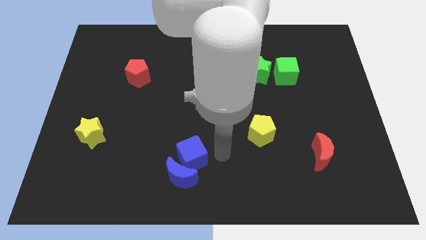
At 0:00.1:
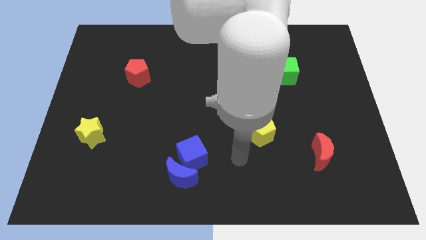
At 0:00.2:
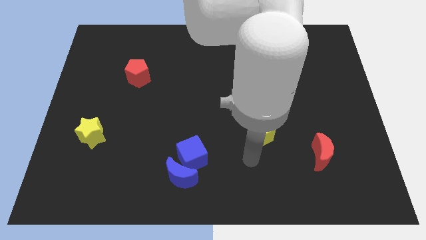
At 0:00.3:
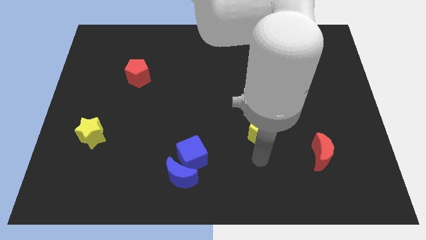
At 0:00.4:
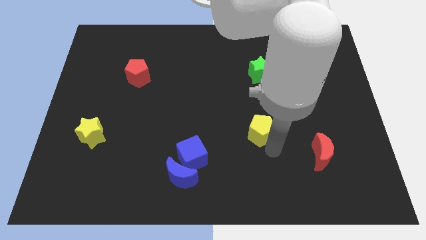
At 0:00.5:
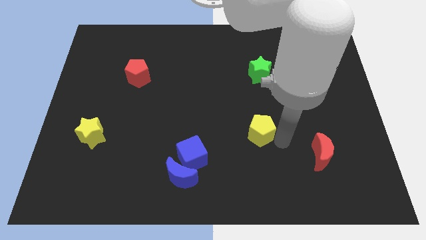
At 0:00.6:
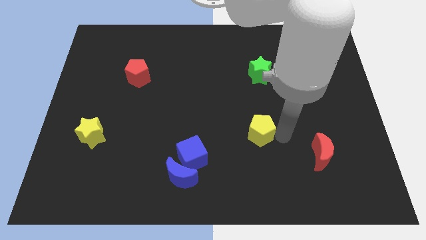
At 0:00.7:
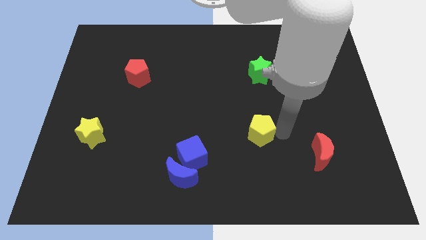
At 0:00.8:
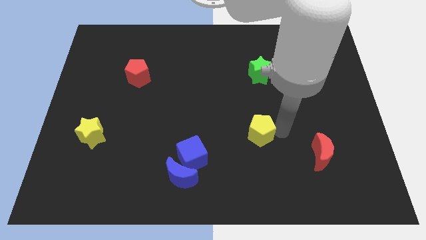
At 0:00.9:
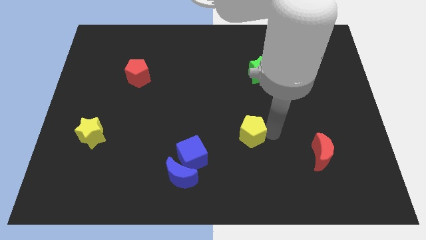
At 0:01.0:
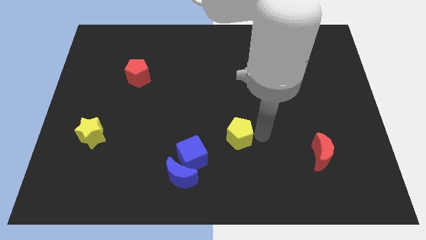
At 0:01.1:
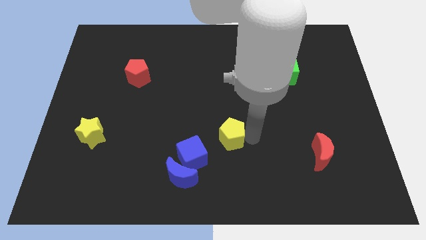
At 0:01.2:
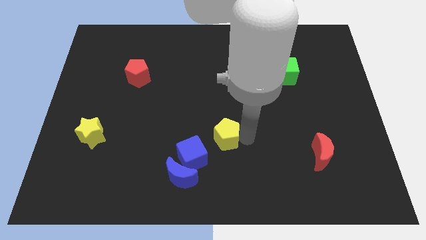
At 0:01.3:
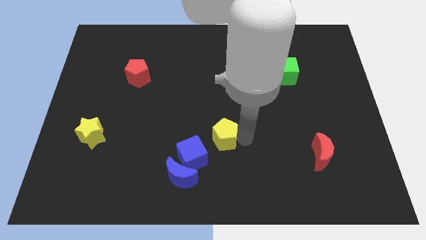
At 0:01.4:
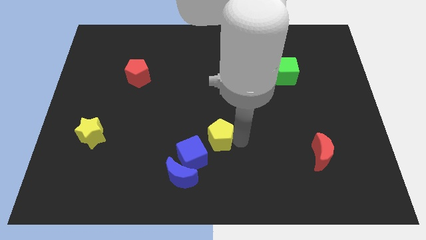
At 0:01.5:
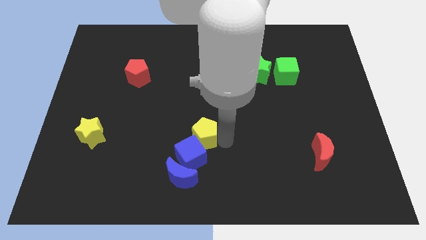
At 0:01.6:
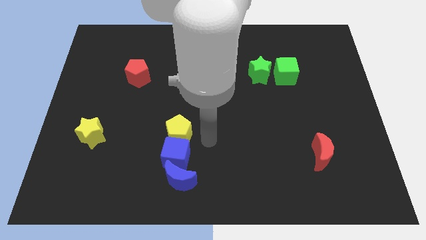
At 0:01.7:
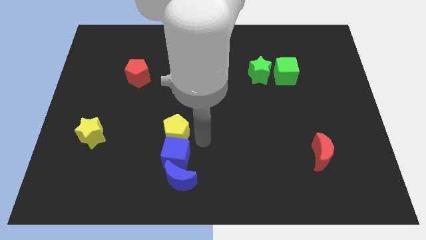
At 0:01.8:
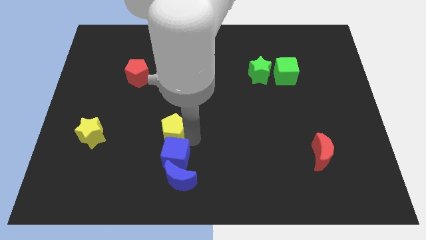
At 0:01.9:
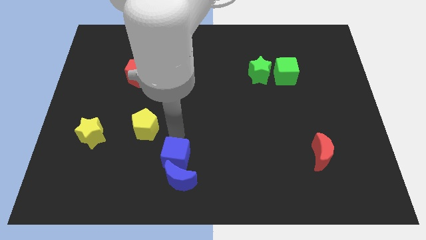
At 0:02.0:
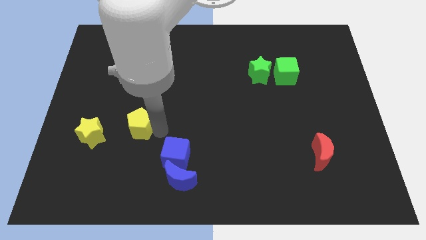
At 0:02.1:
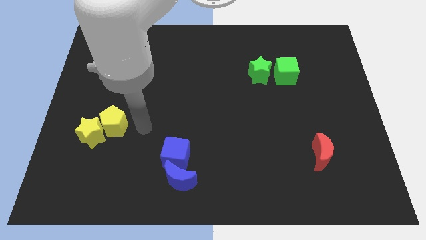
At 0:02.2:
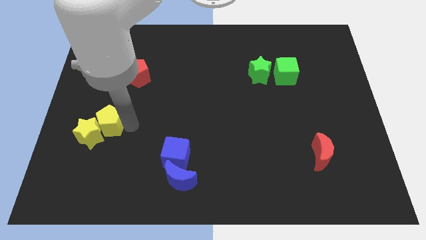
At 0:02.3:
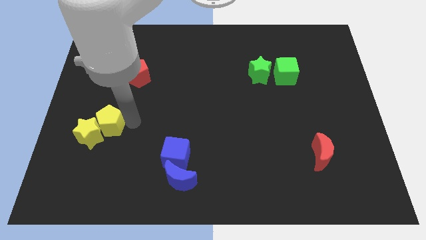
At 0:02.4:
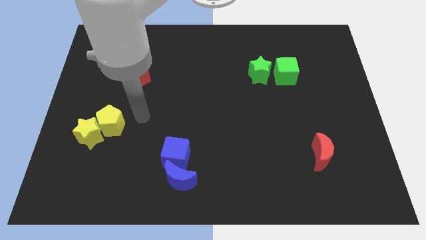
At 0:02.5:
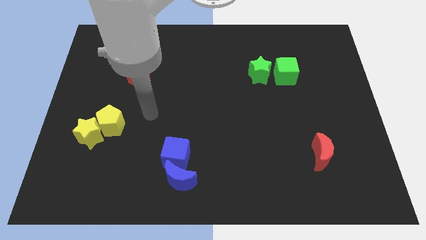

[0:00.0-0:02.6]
place the yellow pentagon into the yellow star

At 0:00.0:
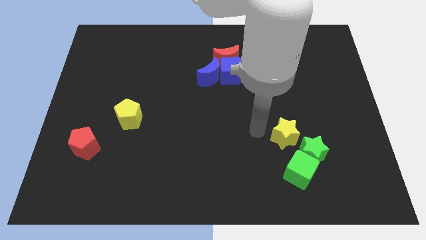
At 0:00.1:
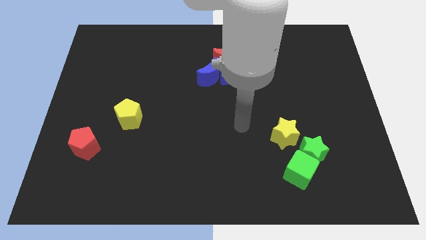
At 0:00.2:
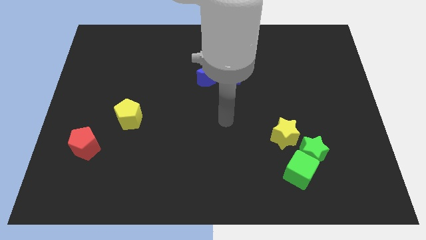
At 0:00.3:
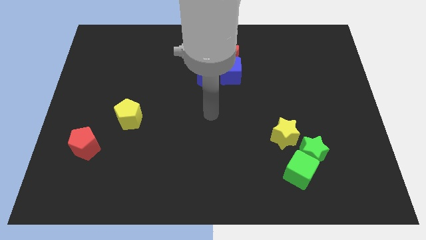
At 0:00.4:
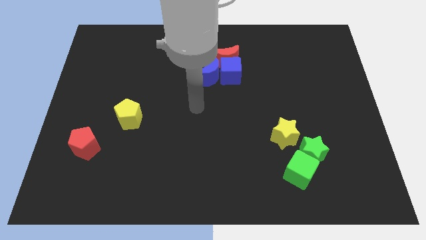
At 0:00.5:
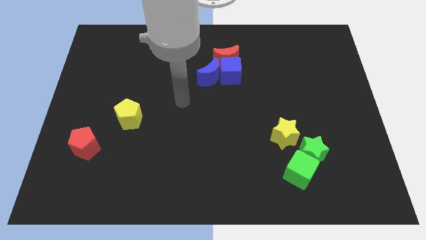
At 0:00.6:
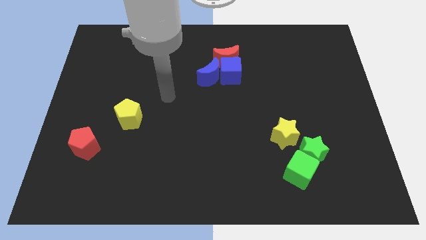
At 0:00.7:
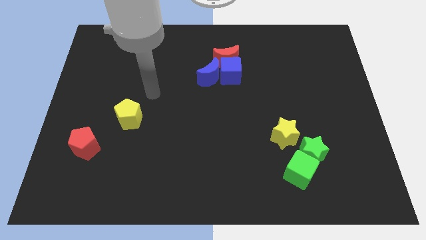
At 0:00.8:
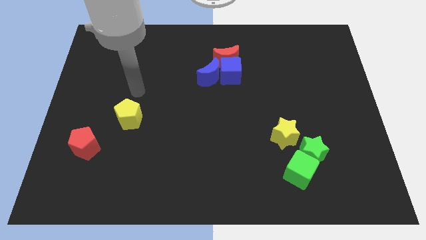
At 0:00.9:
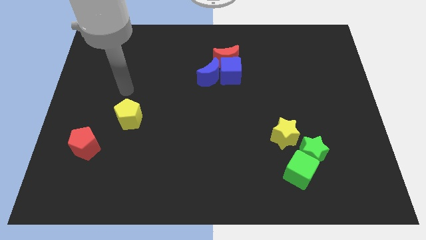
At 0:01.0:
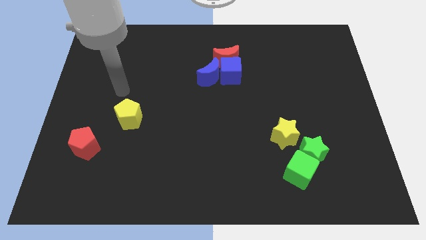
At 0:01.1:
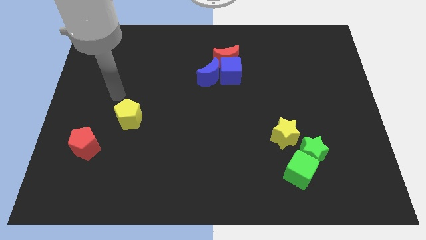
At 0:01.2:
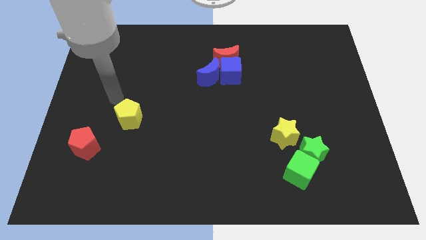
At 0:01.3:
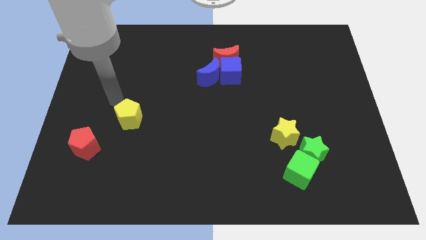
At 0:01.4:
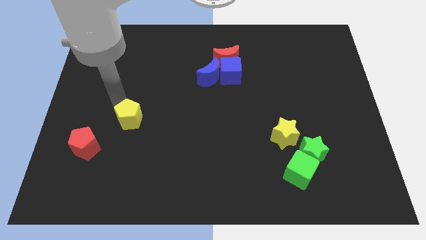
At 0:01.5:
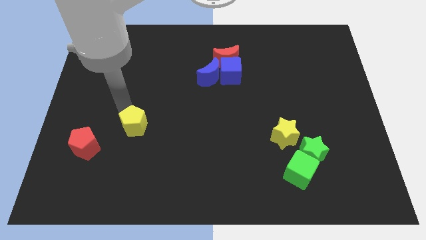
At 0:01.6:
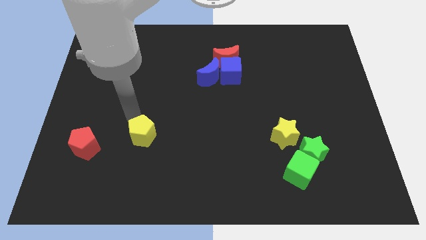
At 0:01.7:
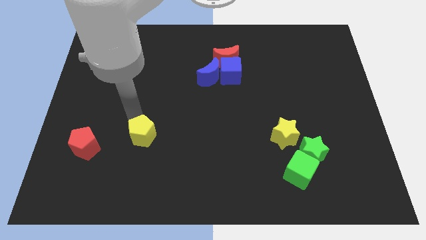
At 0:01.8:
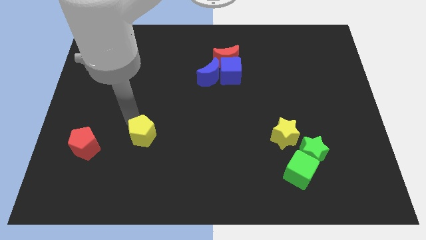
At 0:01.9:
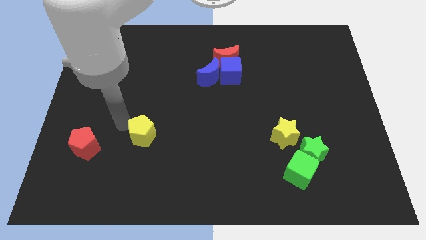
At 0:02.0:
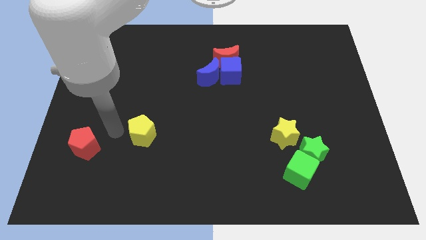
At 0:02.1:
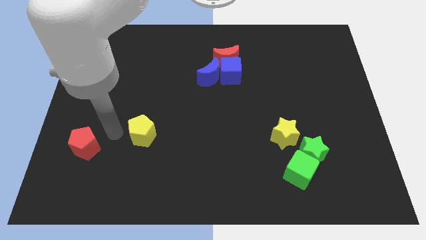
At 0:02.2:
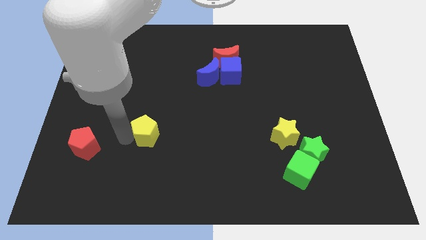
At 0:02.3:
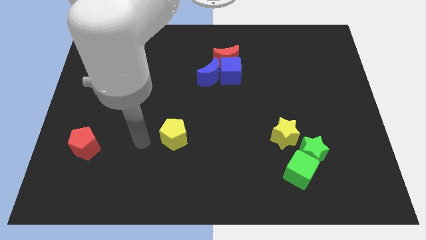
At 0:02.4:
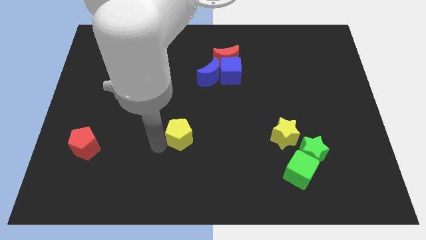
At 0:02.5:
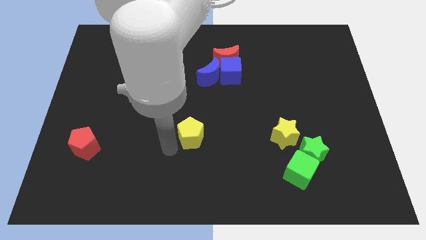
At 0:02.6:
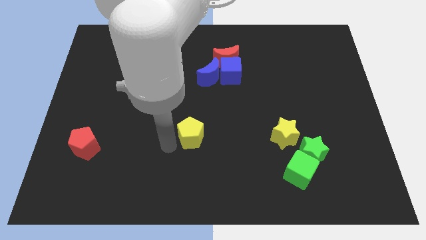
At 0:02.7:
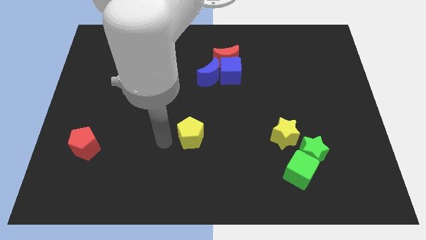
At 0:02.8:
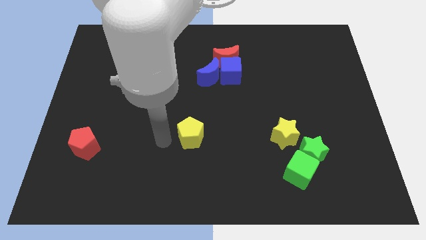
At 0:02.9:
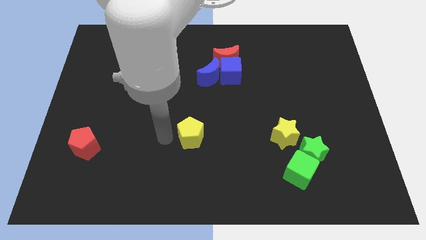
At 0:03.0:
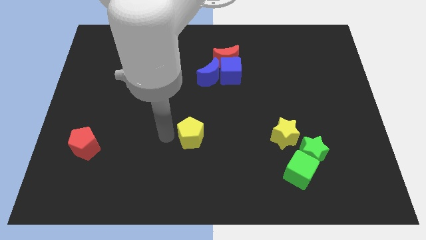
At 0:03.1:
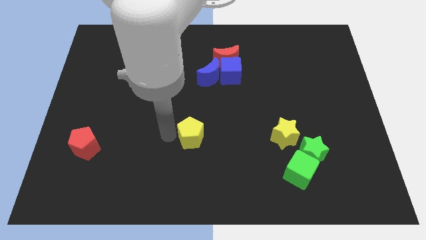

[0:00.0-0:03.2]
push the yellow pentagon to the right side of the board

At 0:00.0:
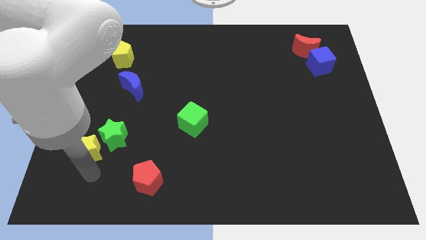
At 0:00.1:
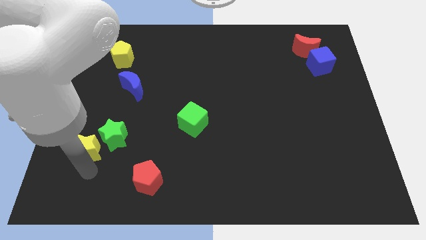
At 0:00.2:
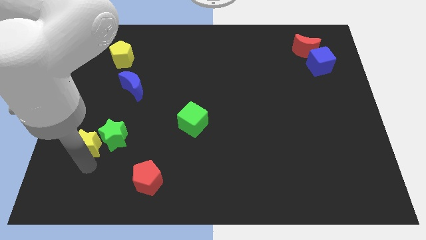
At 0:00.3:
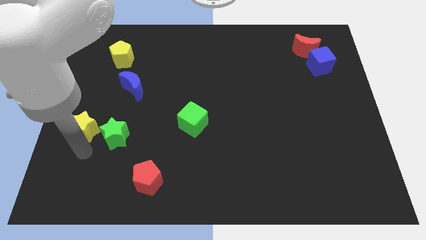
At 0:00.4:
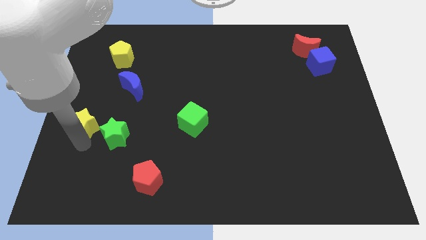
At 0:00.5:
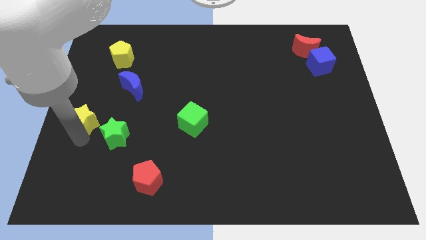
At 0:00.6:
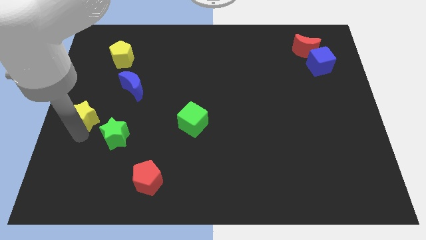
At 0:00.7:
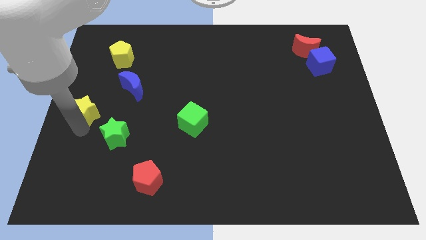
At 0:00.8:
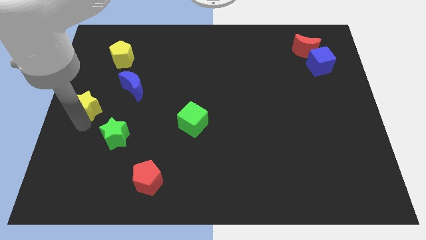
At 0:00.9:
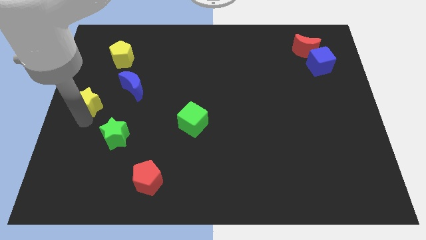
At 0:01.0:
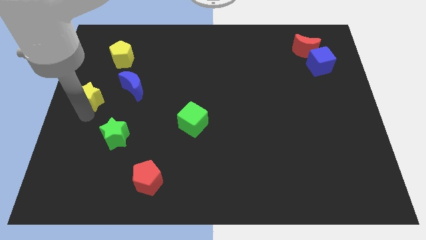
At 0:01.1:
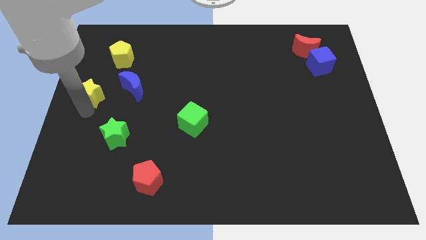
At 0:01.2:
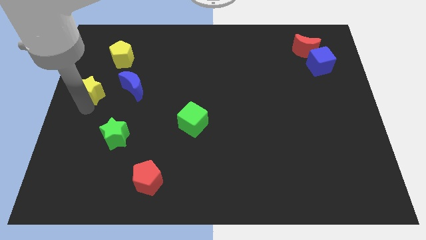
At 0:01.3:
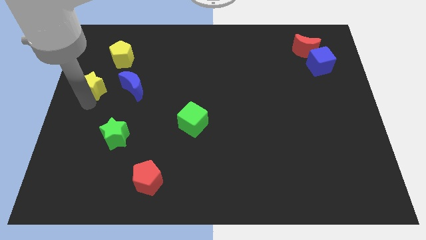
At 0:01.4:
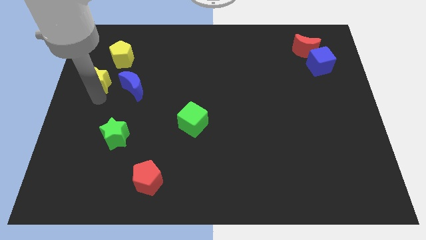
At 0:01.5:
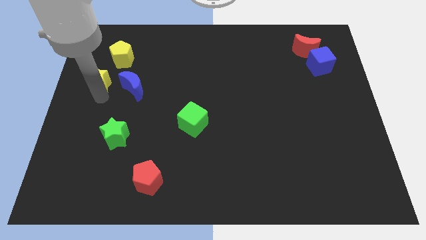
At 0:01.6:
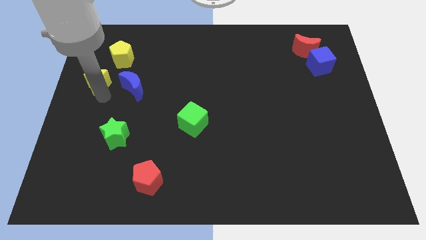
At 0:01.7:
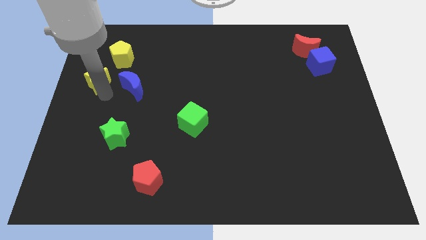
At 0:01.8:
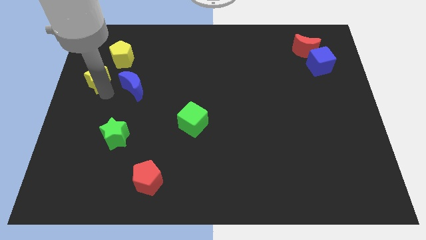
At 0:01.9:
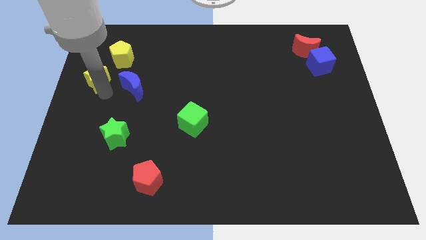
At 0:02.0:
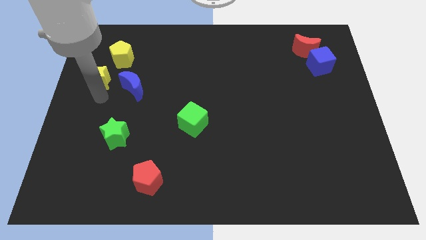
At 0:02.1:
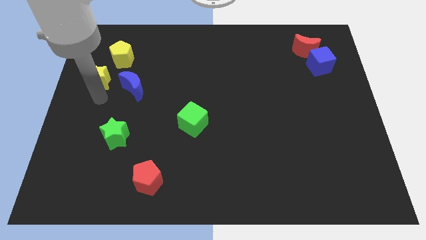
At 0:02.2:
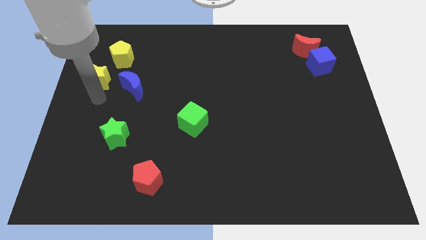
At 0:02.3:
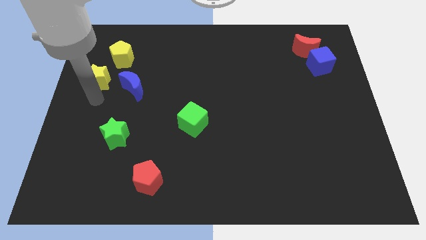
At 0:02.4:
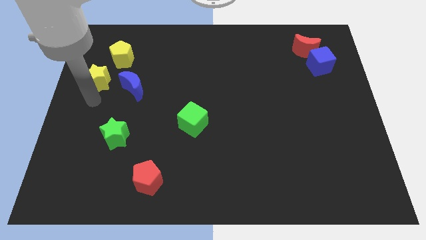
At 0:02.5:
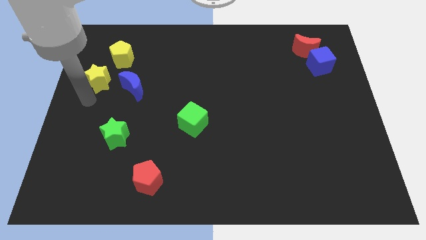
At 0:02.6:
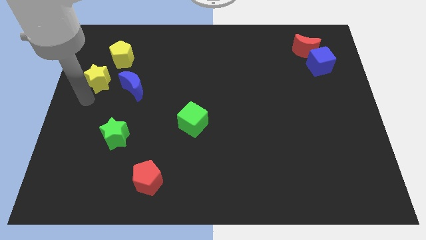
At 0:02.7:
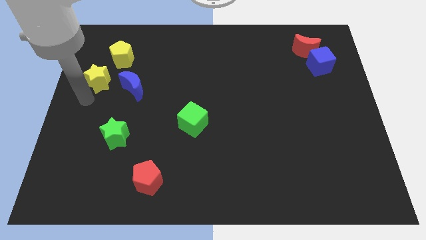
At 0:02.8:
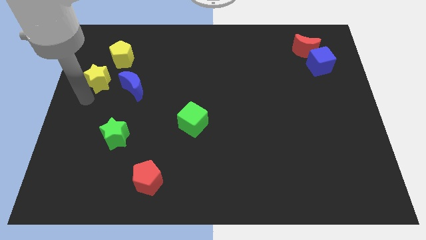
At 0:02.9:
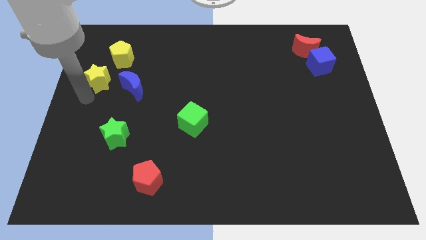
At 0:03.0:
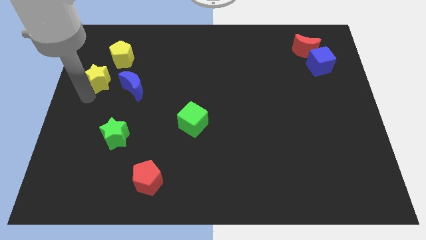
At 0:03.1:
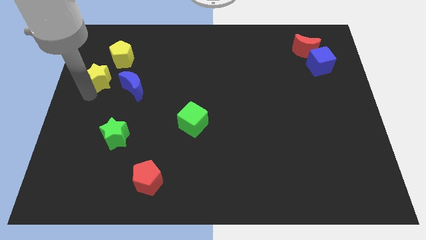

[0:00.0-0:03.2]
move yellow star left beside blue moon

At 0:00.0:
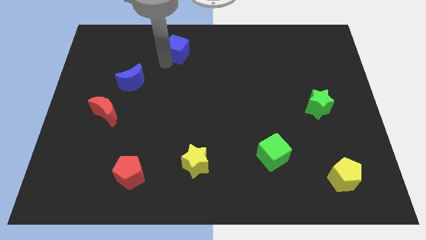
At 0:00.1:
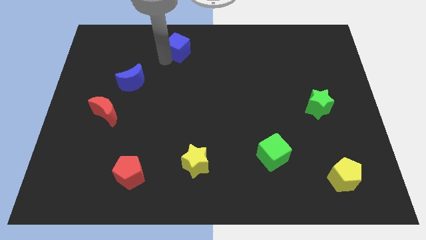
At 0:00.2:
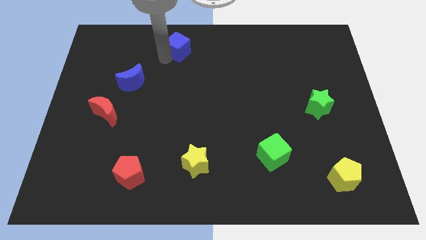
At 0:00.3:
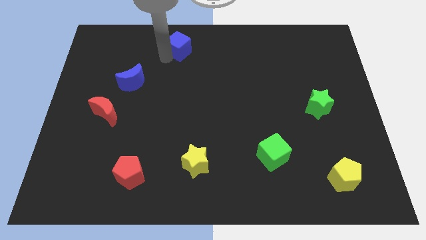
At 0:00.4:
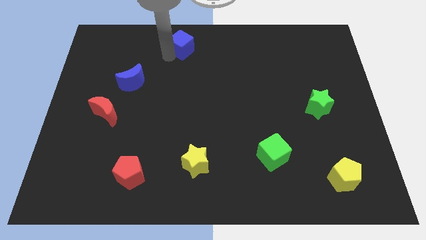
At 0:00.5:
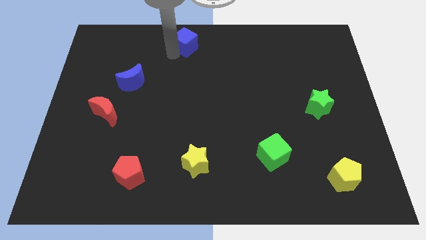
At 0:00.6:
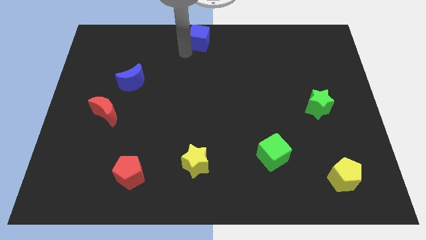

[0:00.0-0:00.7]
move the blue cube to the top center
